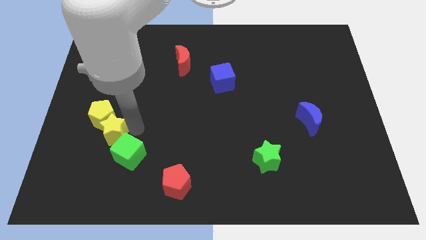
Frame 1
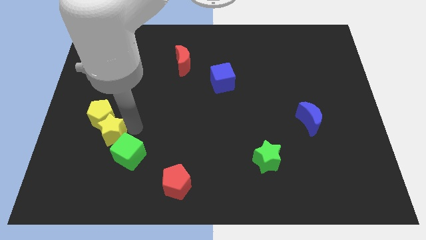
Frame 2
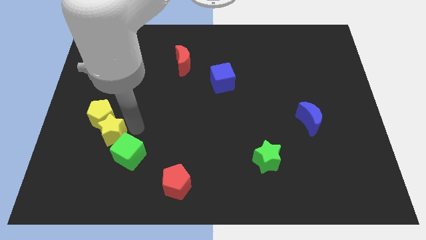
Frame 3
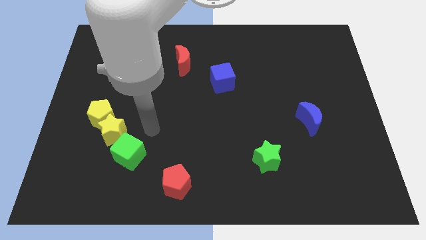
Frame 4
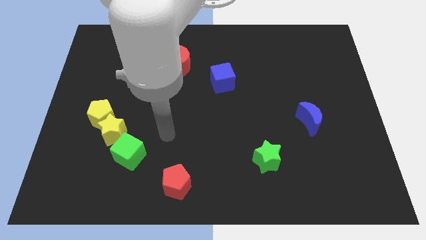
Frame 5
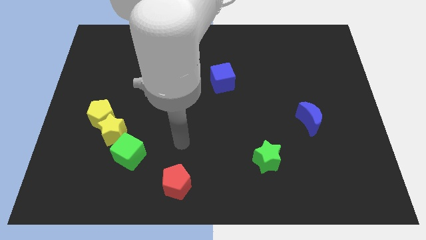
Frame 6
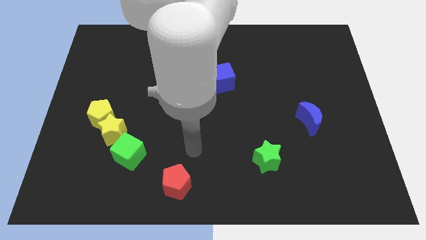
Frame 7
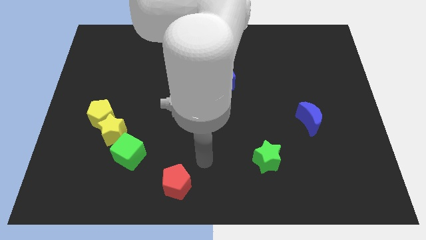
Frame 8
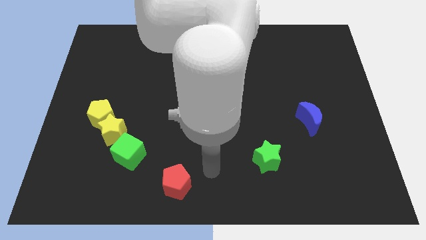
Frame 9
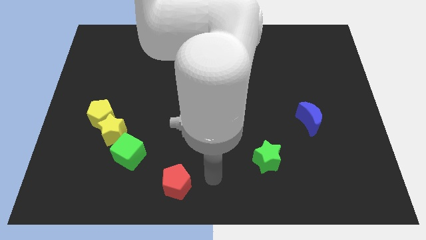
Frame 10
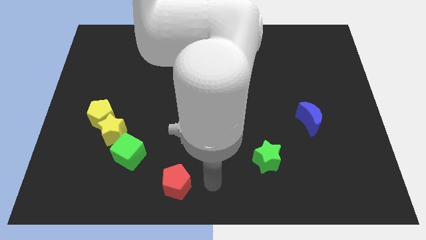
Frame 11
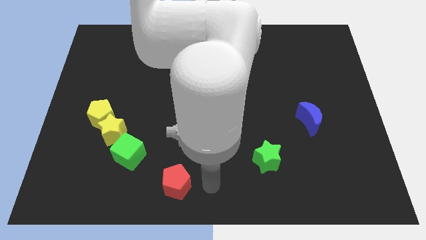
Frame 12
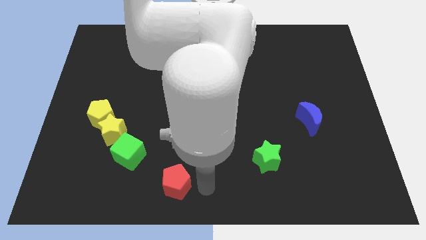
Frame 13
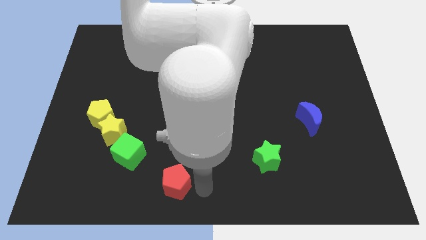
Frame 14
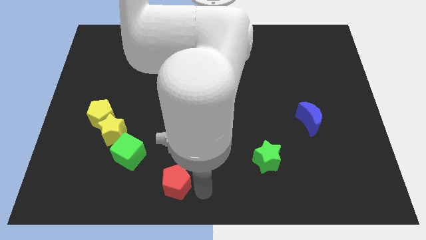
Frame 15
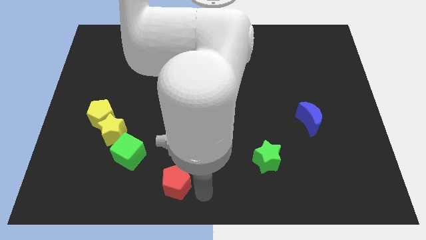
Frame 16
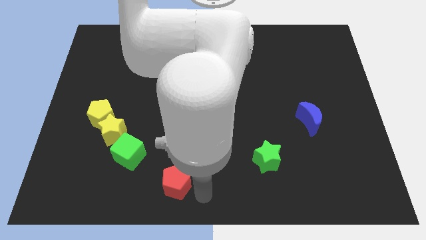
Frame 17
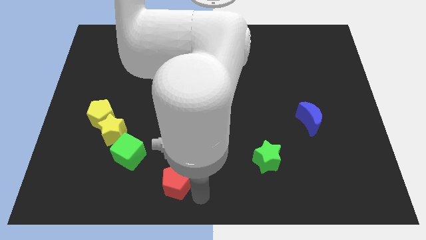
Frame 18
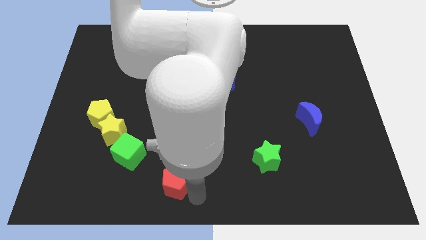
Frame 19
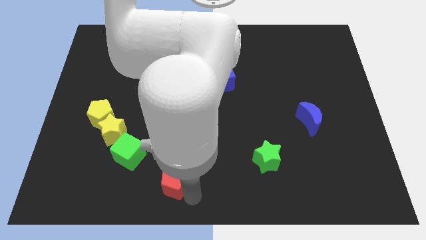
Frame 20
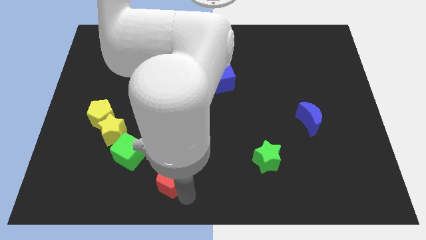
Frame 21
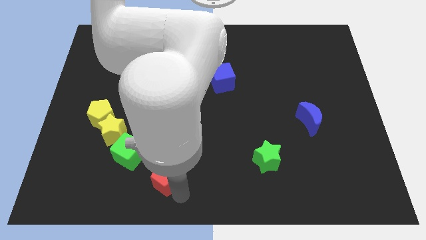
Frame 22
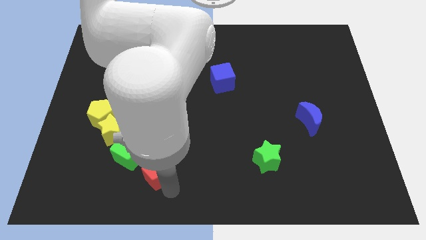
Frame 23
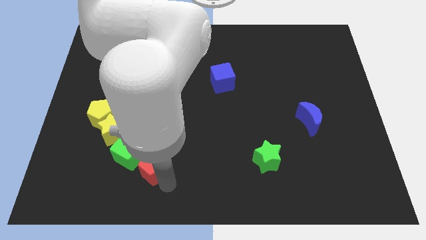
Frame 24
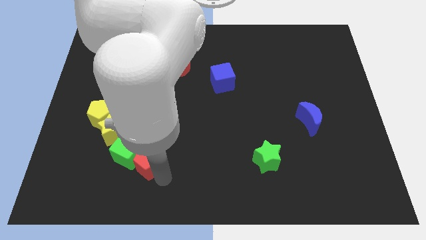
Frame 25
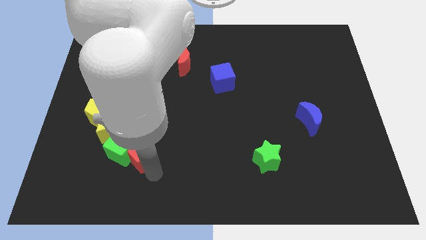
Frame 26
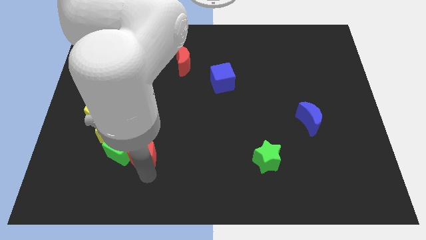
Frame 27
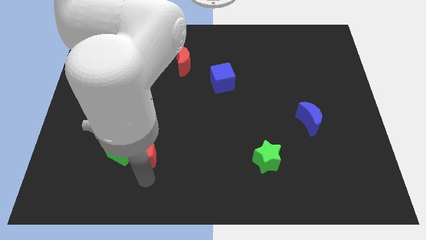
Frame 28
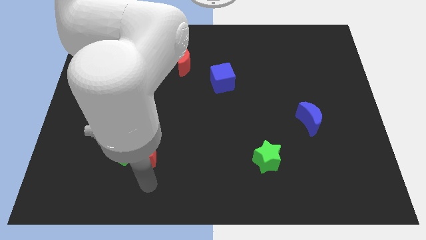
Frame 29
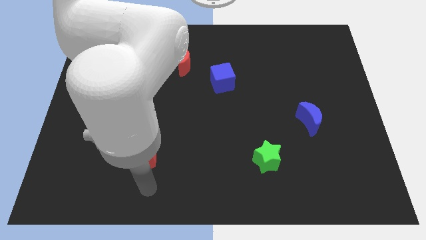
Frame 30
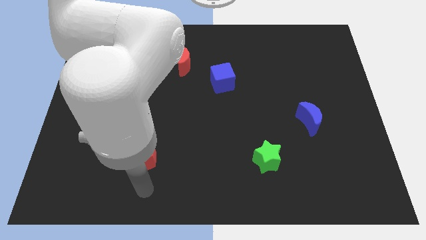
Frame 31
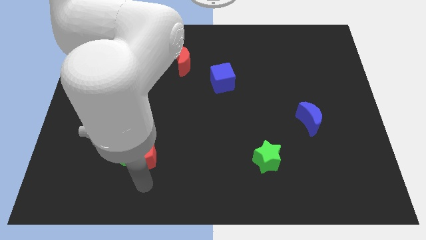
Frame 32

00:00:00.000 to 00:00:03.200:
place the red pentagon to the right side of the green cube

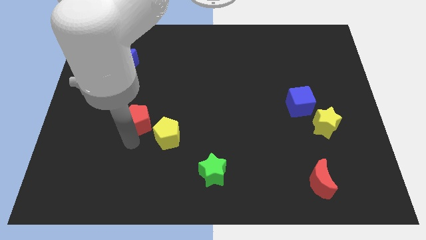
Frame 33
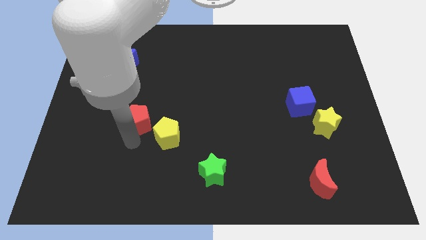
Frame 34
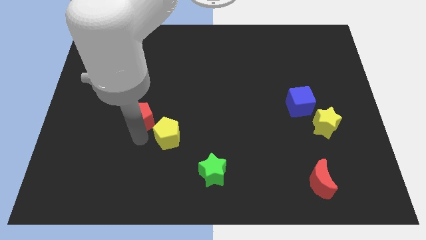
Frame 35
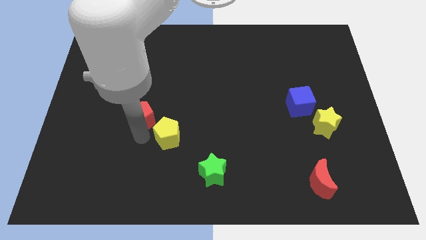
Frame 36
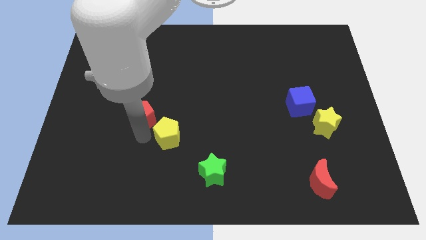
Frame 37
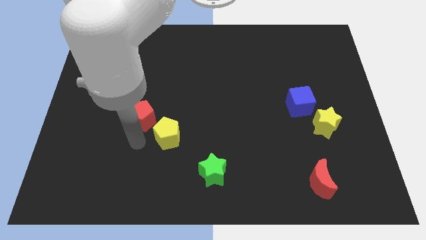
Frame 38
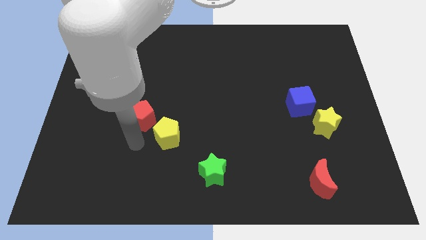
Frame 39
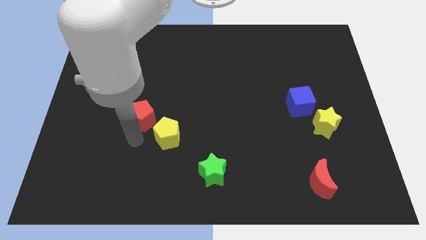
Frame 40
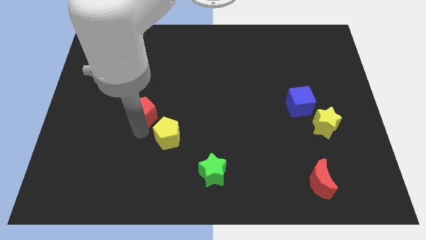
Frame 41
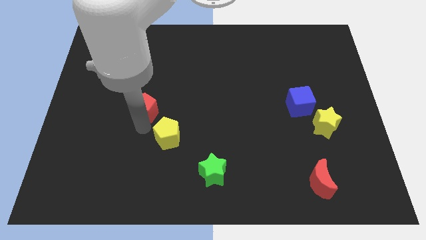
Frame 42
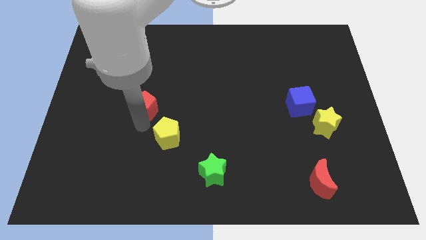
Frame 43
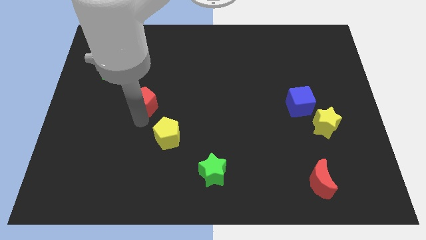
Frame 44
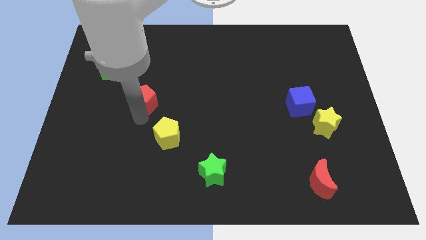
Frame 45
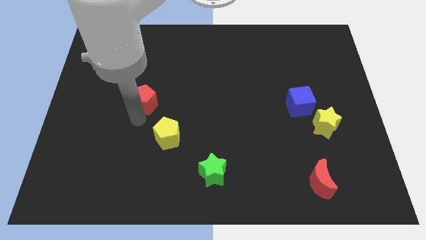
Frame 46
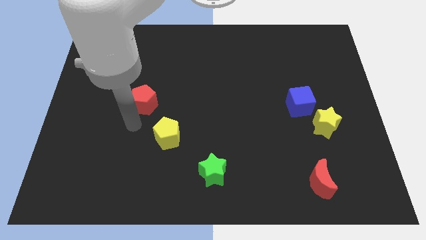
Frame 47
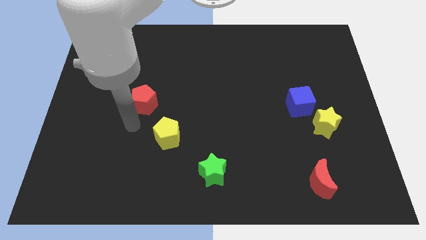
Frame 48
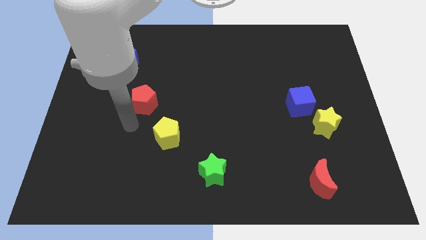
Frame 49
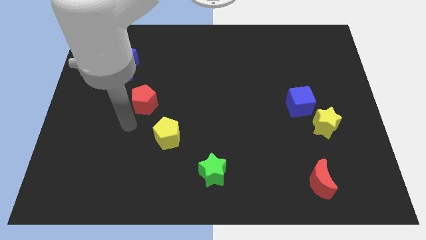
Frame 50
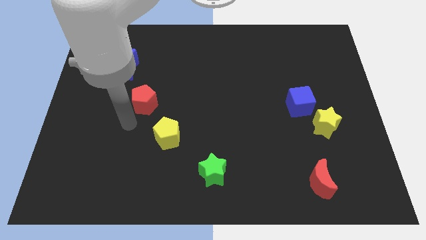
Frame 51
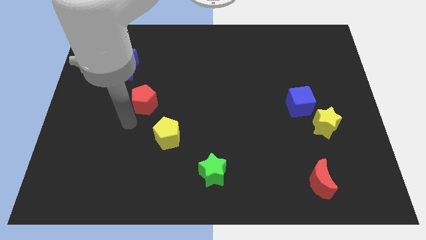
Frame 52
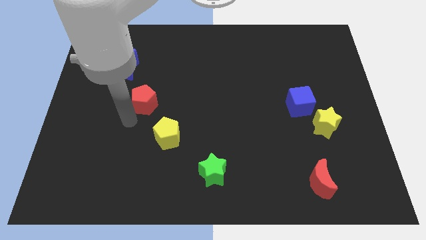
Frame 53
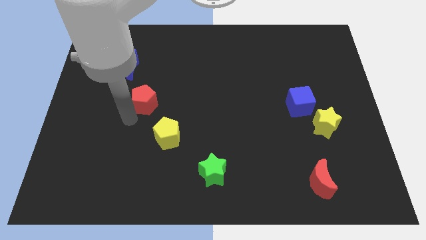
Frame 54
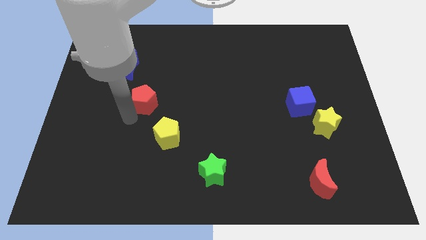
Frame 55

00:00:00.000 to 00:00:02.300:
place the red pentagon in between the yellow pentagon and blue crescent

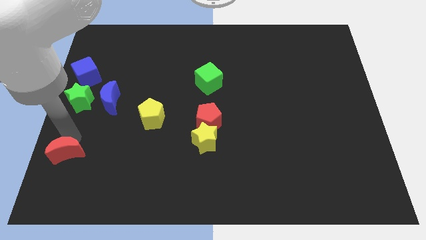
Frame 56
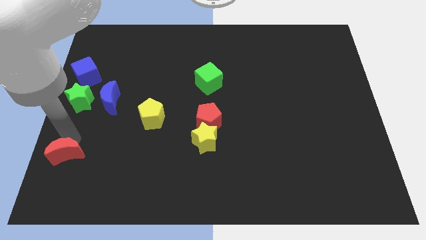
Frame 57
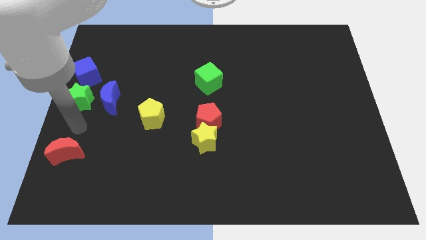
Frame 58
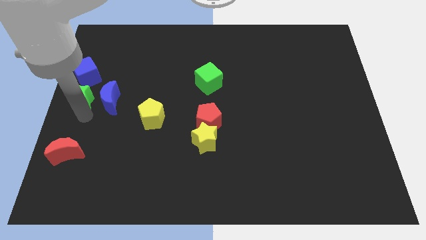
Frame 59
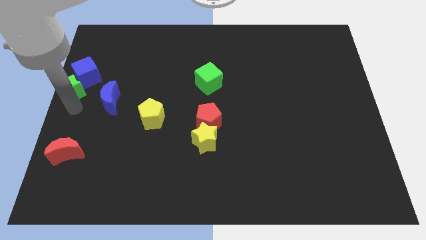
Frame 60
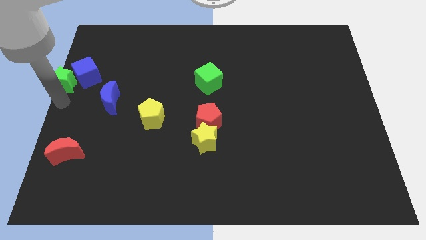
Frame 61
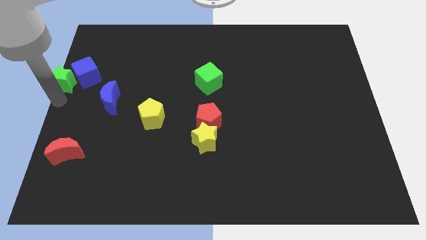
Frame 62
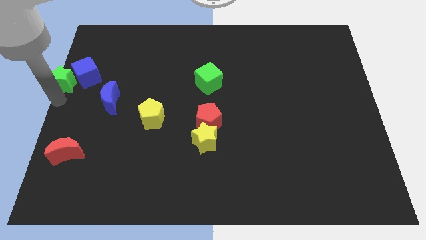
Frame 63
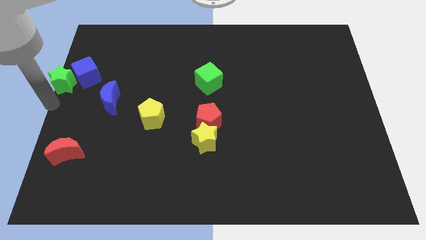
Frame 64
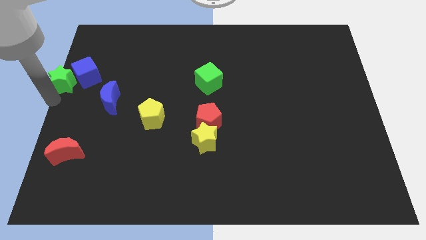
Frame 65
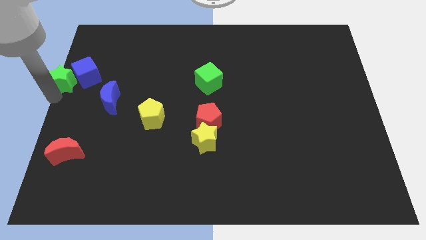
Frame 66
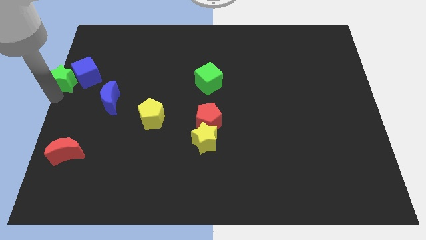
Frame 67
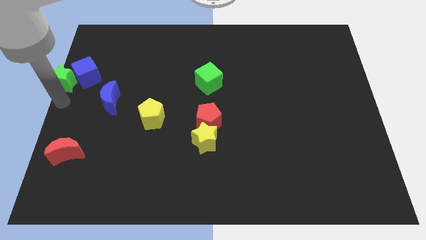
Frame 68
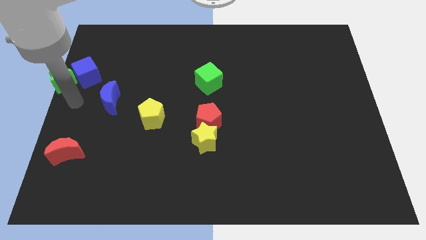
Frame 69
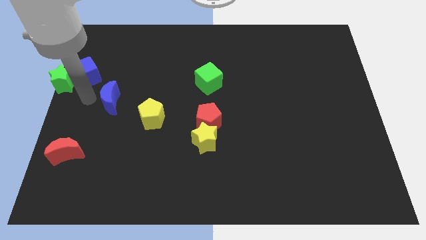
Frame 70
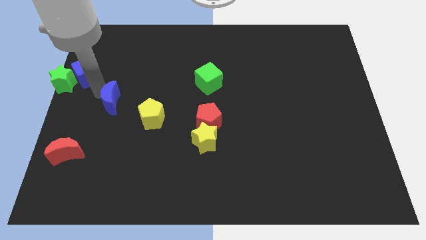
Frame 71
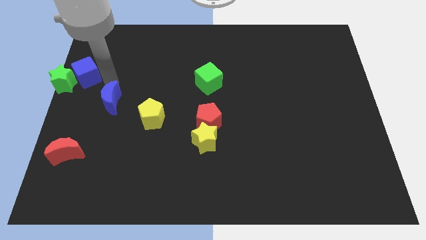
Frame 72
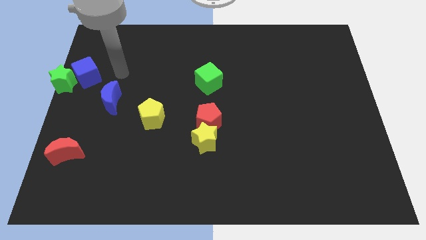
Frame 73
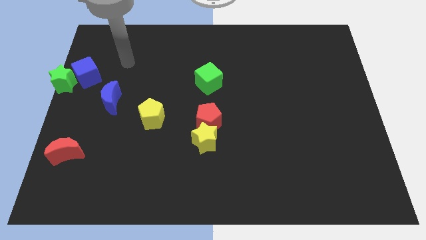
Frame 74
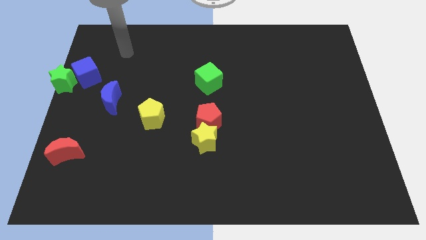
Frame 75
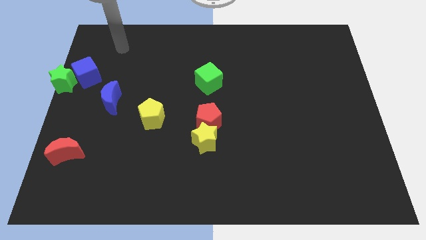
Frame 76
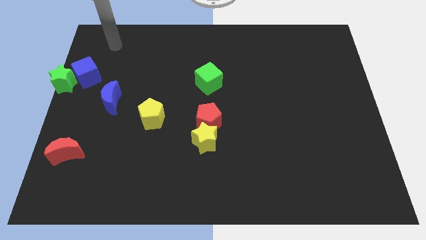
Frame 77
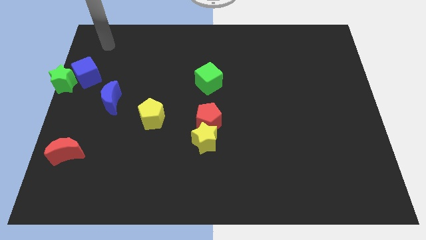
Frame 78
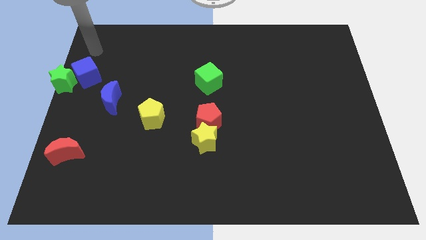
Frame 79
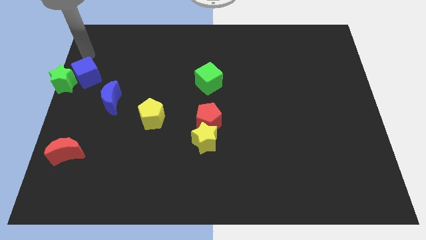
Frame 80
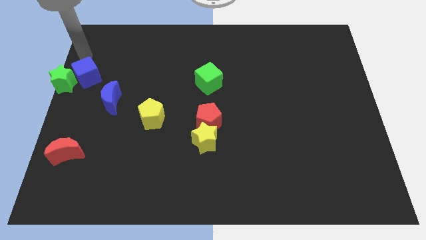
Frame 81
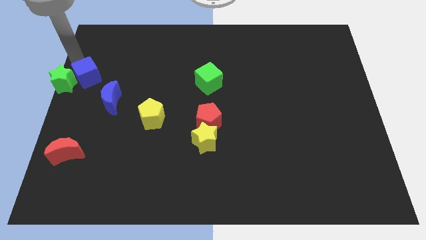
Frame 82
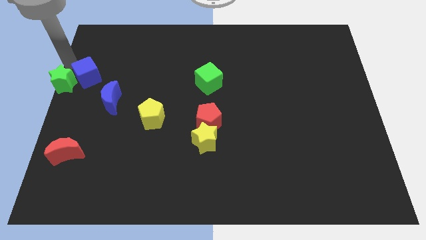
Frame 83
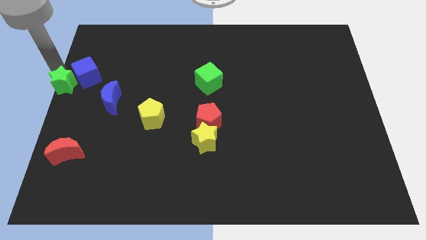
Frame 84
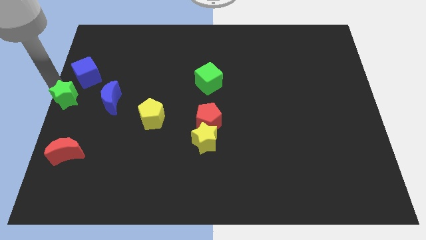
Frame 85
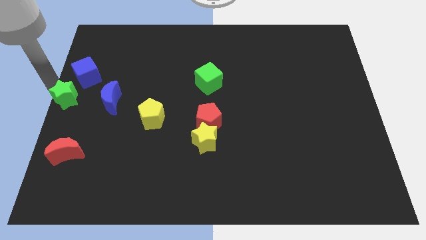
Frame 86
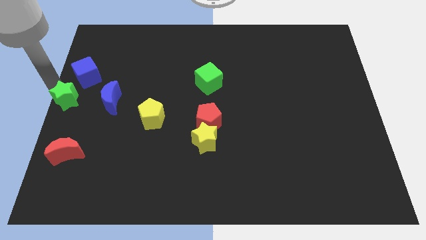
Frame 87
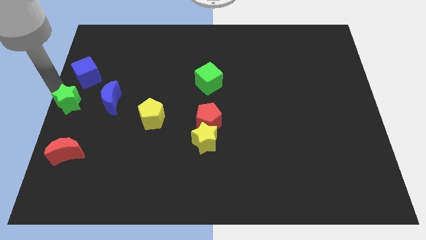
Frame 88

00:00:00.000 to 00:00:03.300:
place the green star to left center of the board
